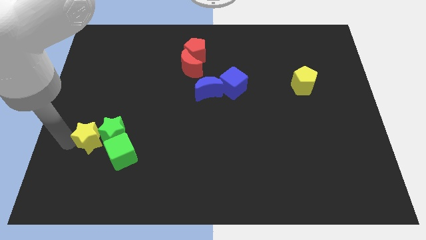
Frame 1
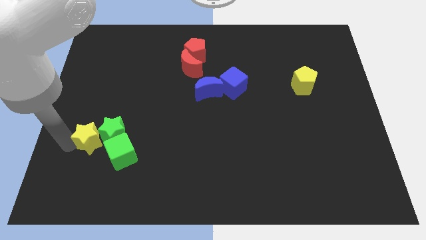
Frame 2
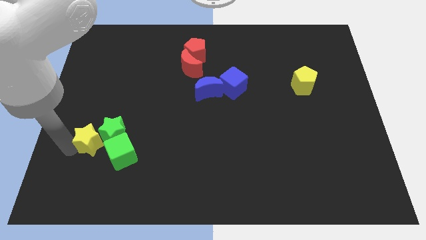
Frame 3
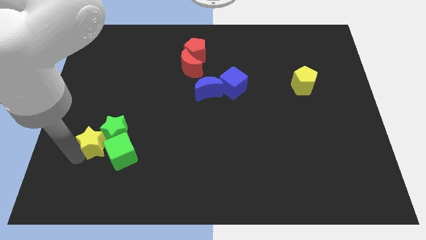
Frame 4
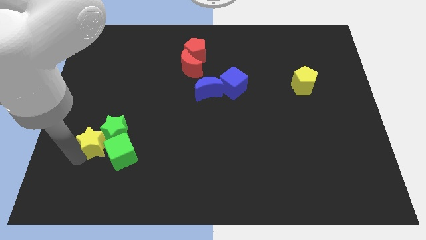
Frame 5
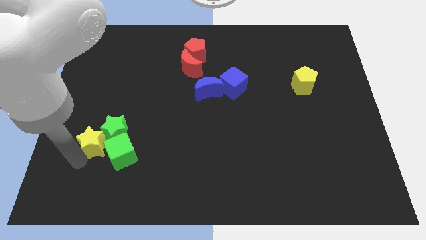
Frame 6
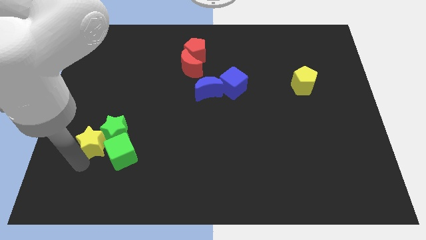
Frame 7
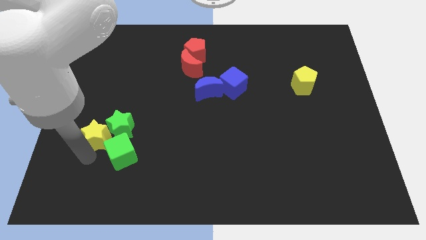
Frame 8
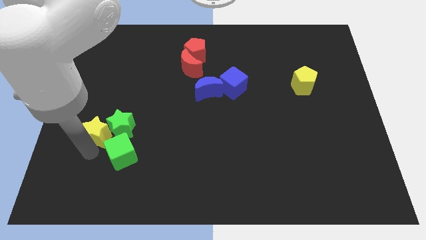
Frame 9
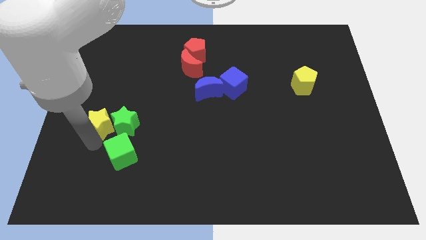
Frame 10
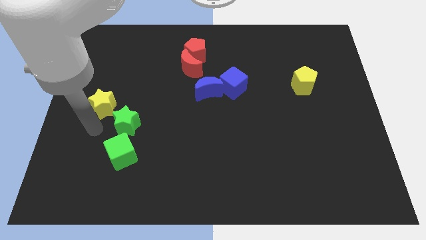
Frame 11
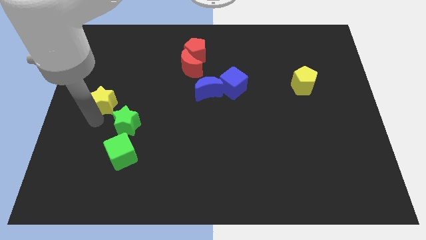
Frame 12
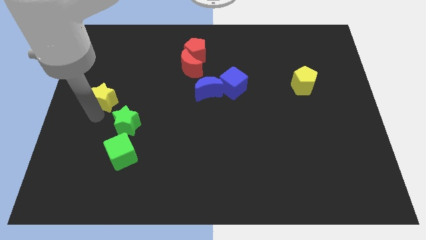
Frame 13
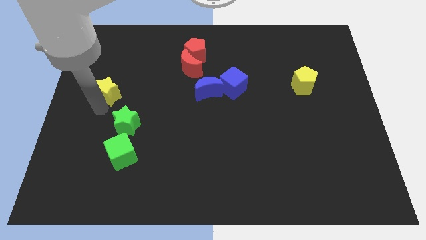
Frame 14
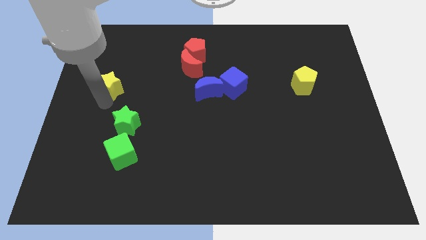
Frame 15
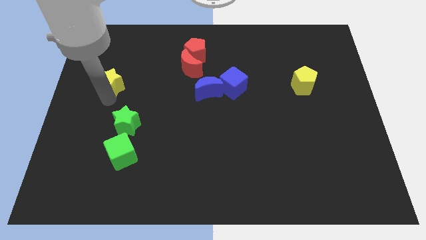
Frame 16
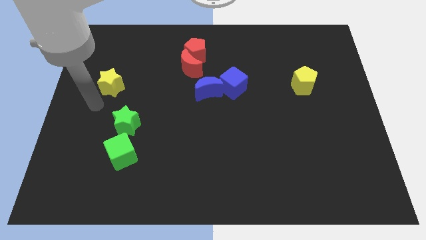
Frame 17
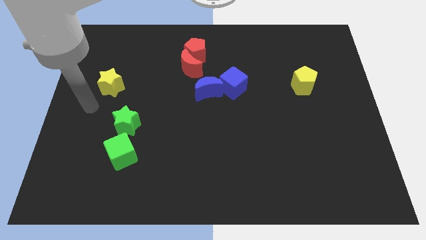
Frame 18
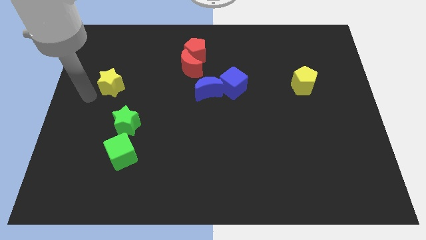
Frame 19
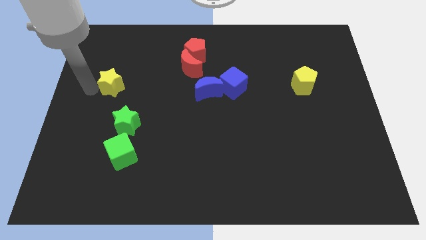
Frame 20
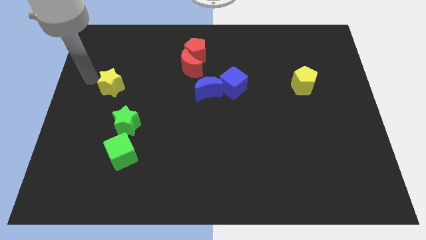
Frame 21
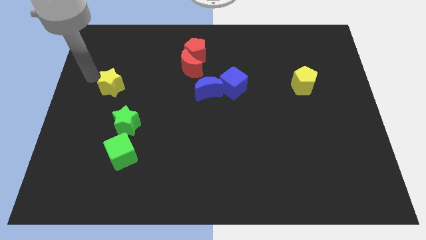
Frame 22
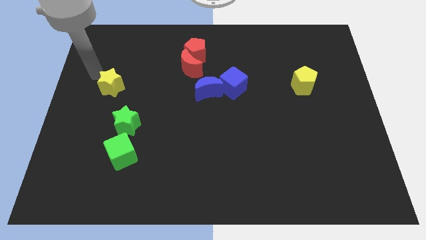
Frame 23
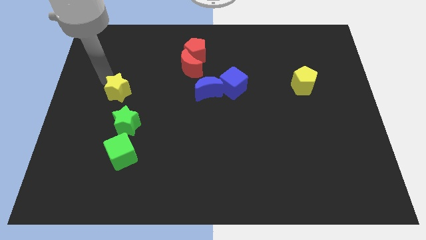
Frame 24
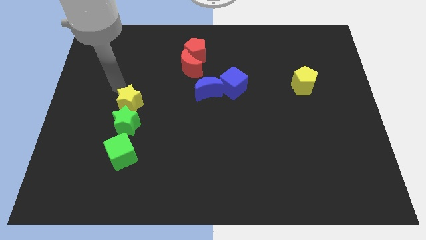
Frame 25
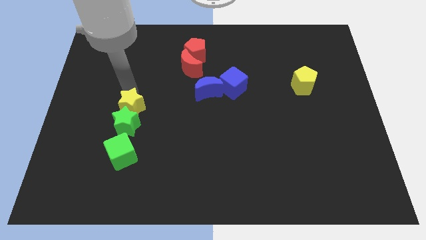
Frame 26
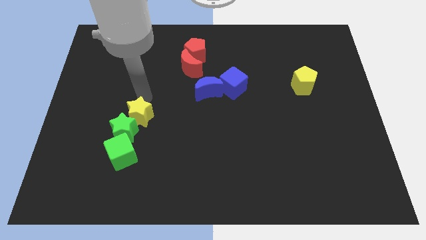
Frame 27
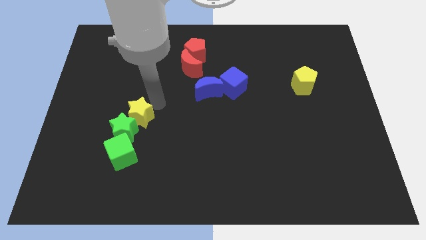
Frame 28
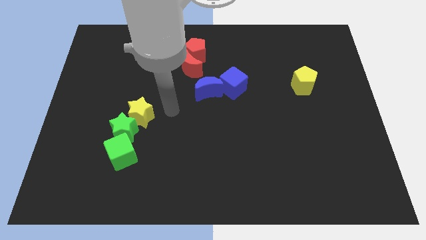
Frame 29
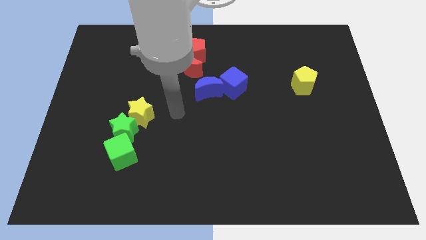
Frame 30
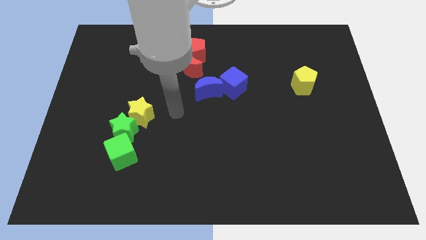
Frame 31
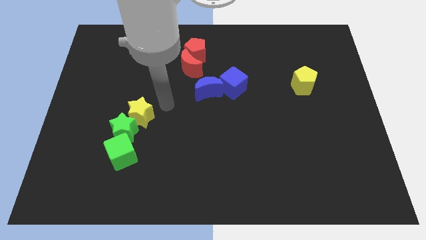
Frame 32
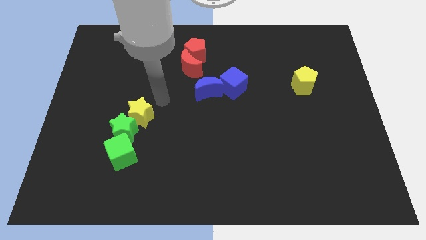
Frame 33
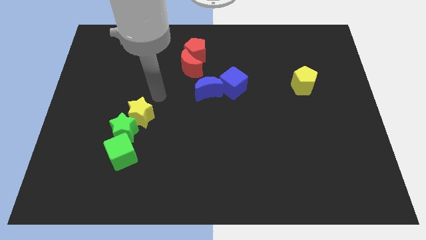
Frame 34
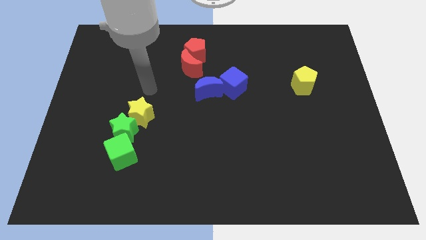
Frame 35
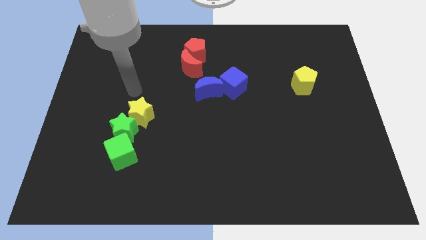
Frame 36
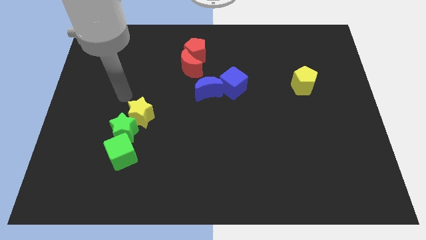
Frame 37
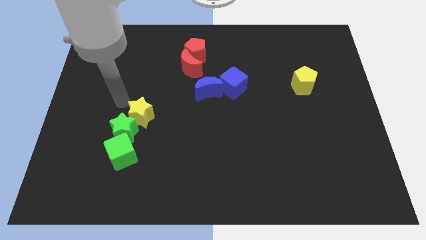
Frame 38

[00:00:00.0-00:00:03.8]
move the yellow star to the top right side of the green star

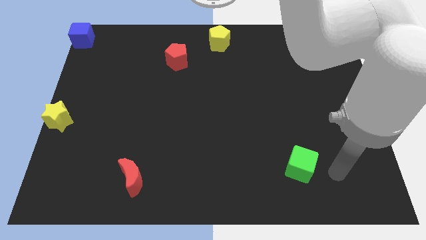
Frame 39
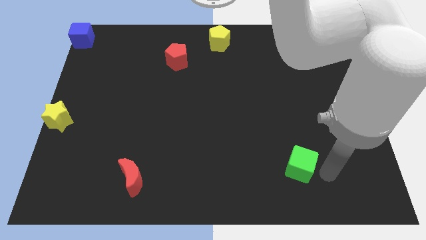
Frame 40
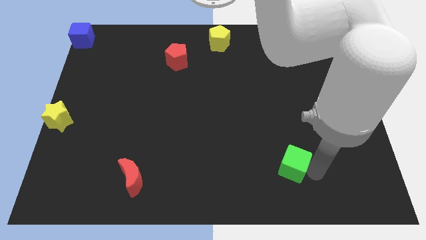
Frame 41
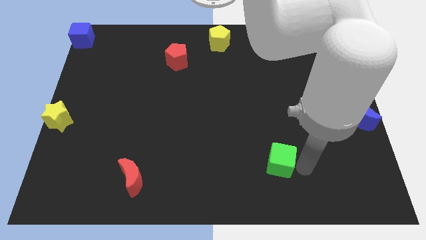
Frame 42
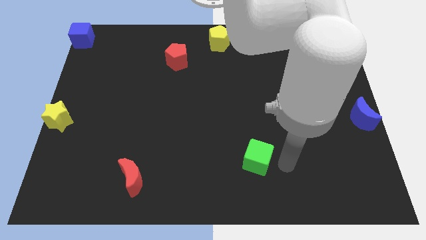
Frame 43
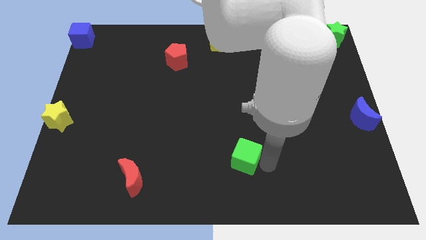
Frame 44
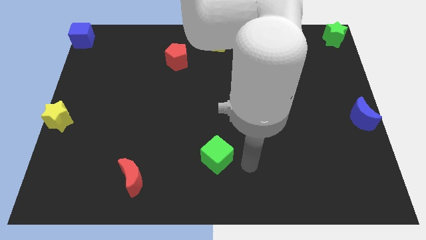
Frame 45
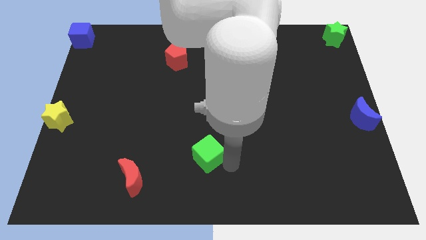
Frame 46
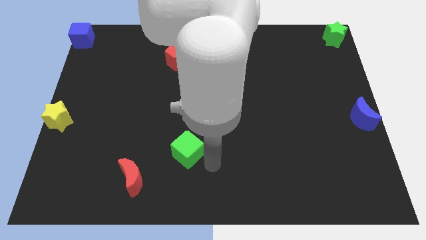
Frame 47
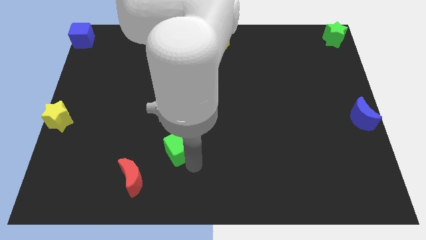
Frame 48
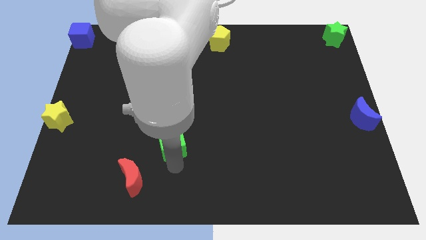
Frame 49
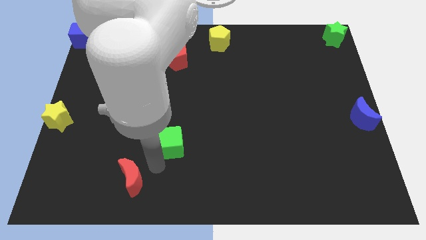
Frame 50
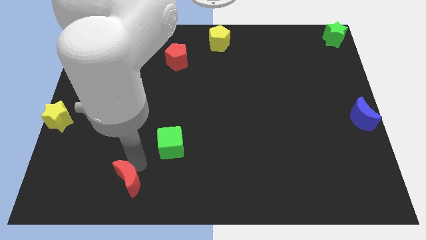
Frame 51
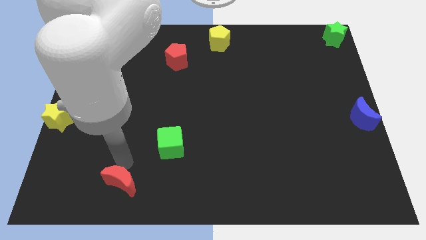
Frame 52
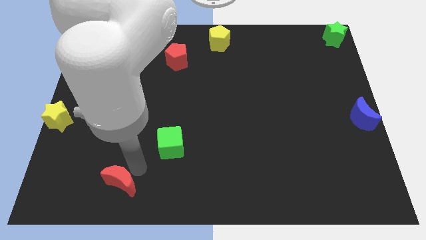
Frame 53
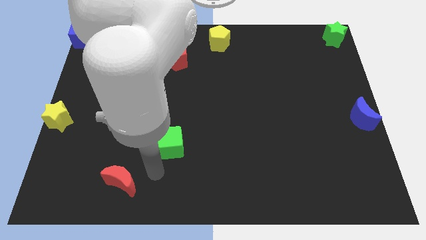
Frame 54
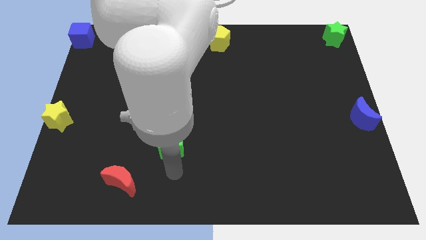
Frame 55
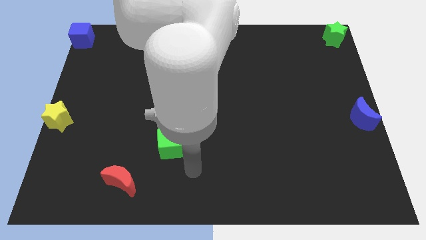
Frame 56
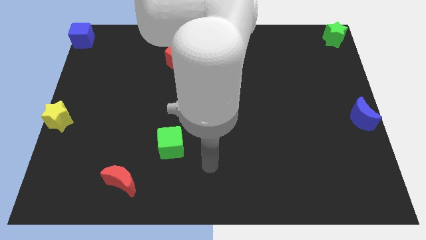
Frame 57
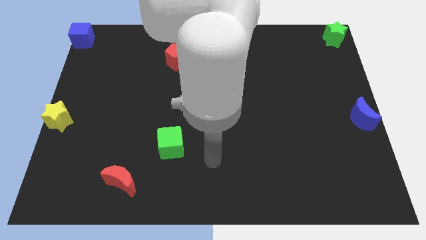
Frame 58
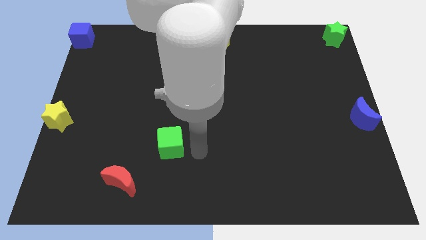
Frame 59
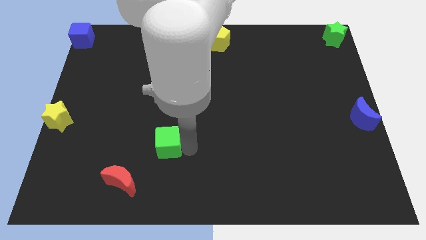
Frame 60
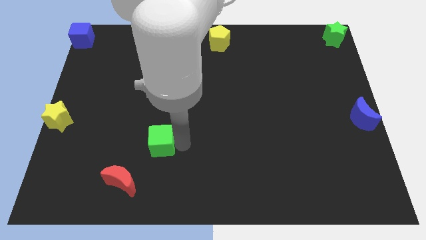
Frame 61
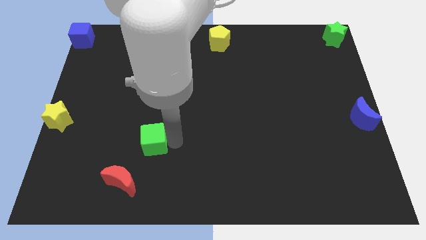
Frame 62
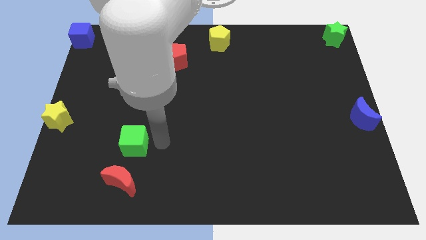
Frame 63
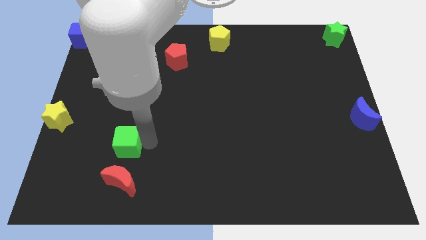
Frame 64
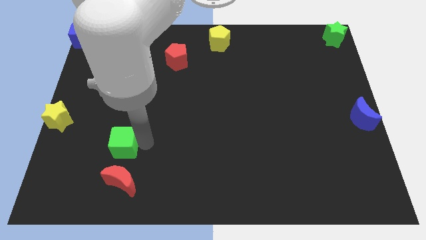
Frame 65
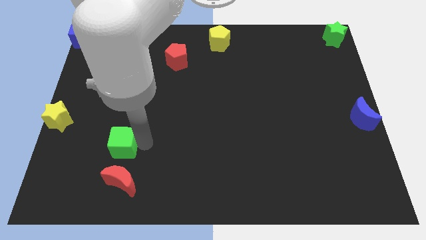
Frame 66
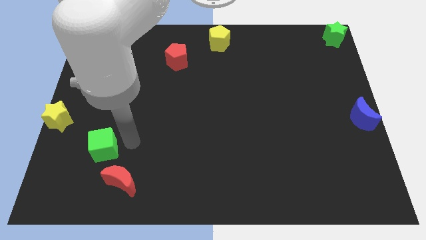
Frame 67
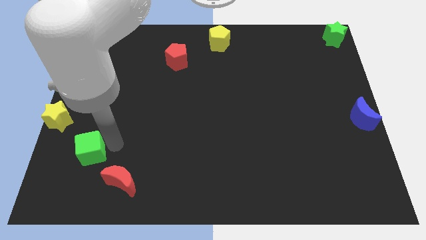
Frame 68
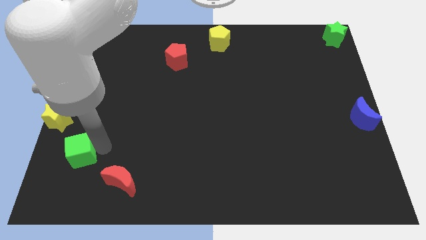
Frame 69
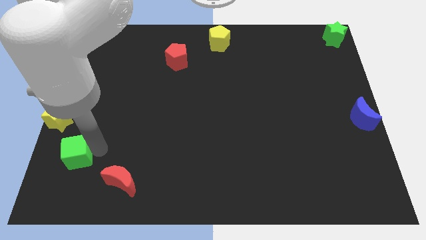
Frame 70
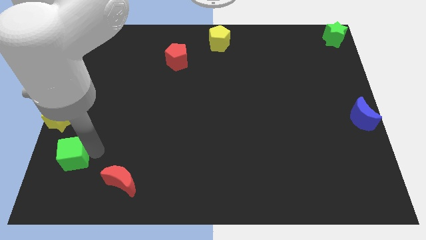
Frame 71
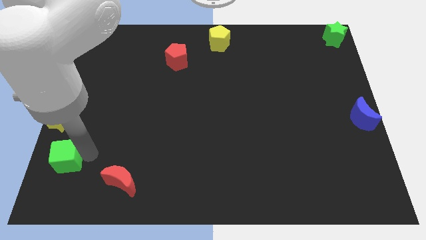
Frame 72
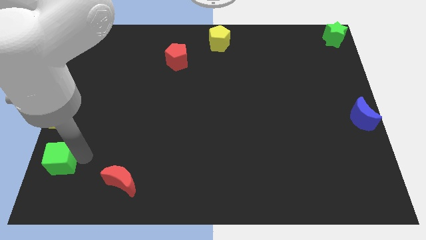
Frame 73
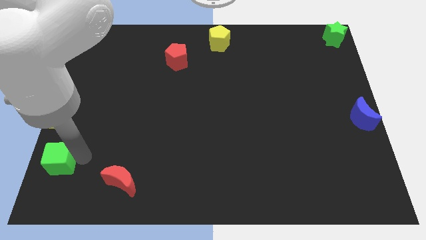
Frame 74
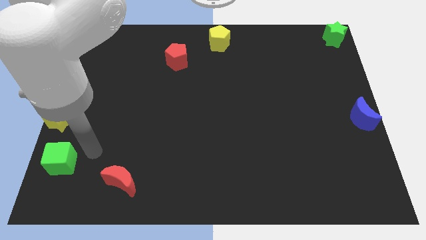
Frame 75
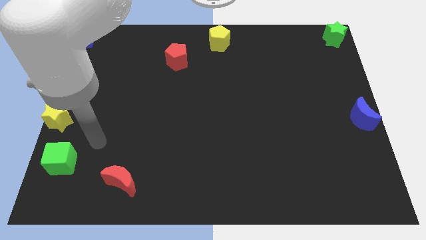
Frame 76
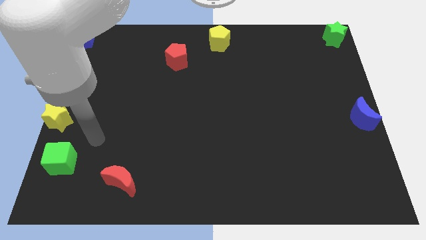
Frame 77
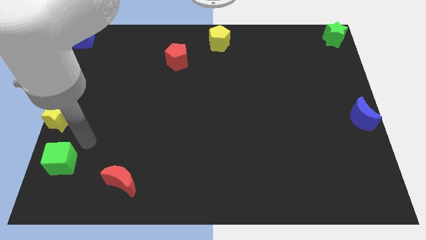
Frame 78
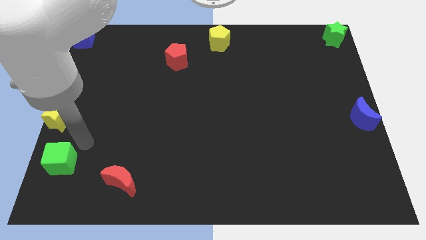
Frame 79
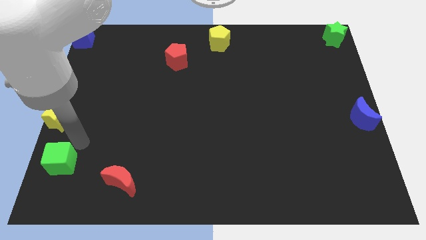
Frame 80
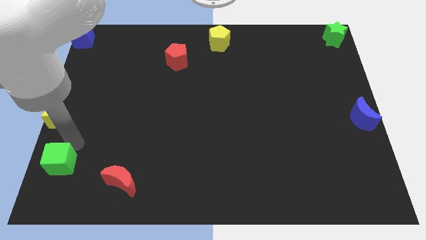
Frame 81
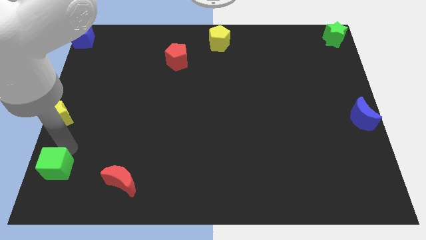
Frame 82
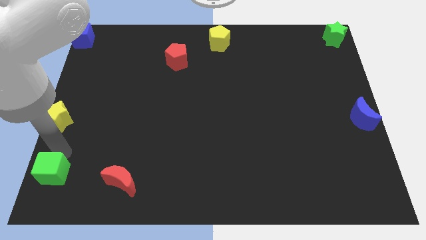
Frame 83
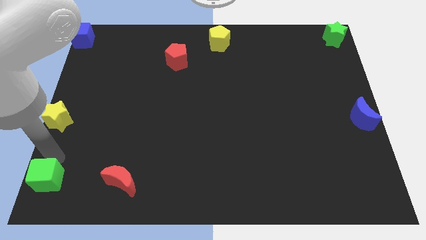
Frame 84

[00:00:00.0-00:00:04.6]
place the green cube parallel to red moon

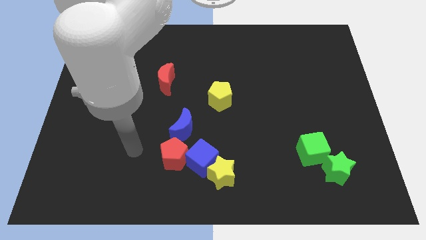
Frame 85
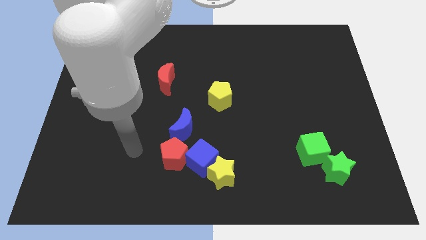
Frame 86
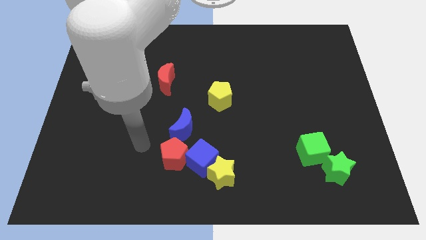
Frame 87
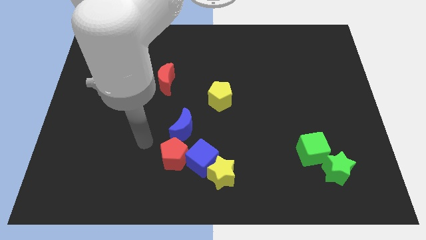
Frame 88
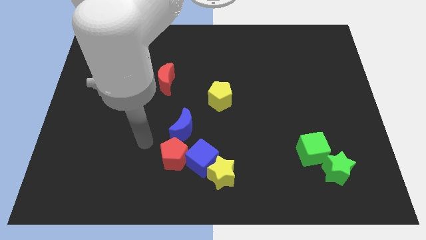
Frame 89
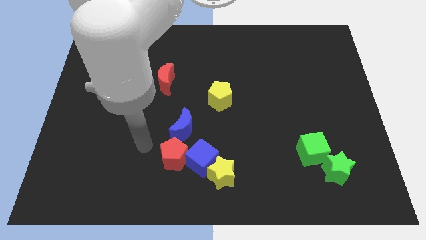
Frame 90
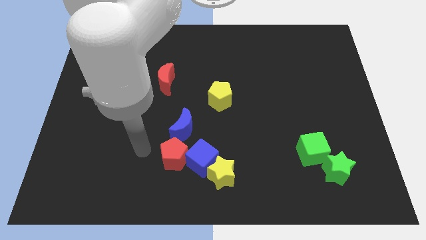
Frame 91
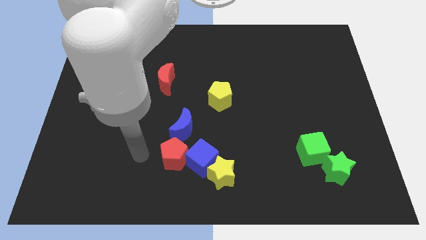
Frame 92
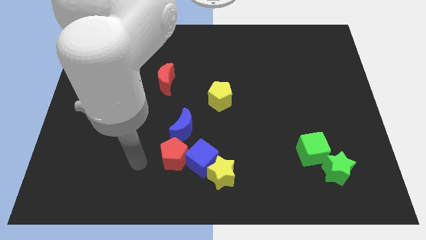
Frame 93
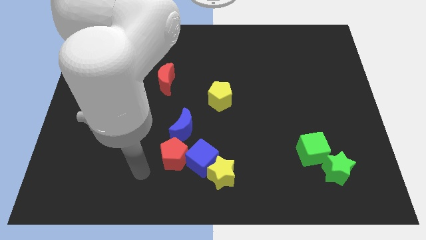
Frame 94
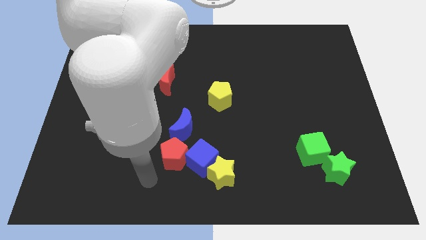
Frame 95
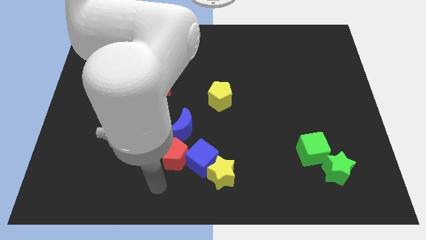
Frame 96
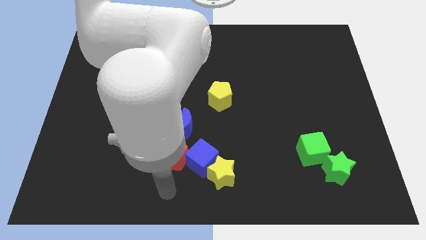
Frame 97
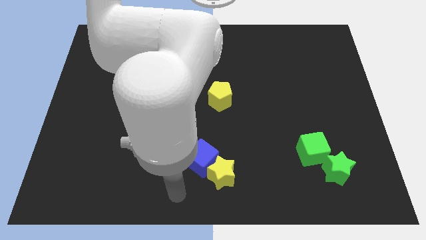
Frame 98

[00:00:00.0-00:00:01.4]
point your arm at the bottom of the red pentagon
